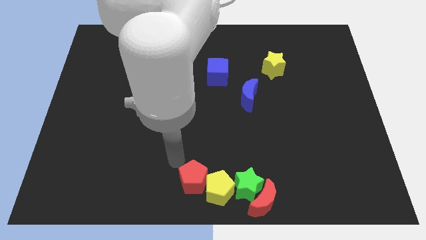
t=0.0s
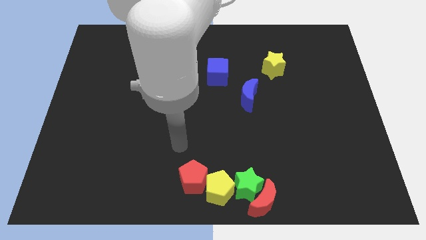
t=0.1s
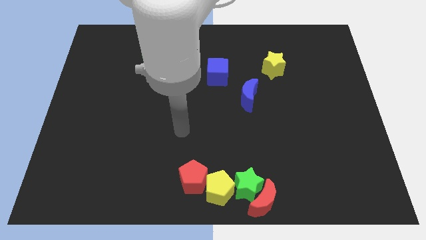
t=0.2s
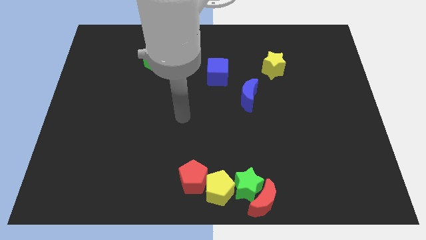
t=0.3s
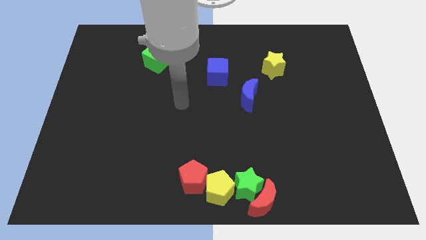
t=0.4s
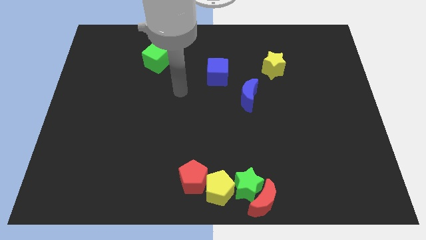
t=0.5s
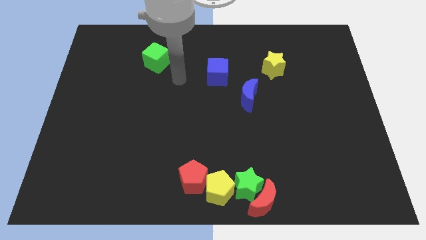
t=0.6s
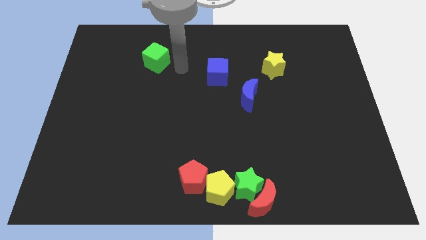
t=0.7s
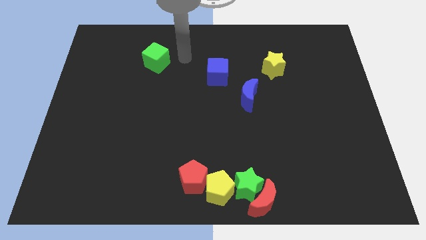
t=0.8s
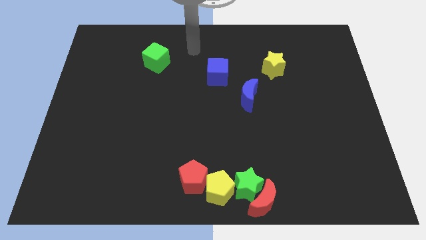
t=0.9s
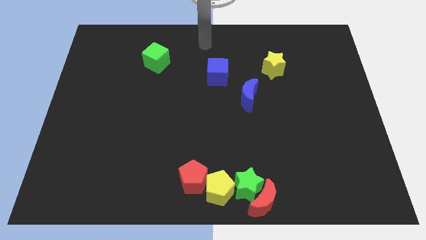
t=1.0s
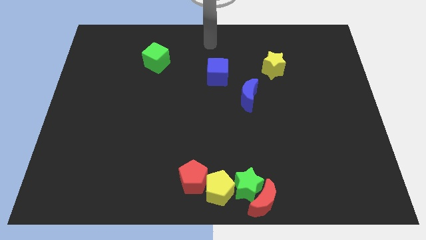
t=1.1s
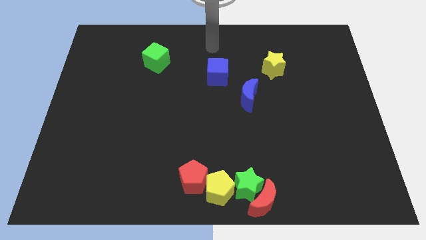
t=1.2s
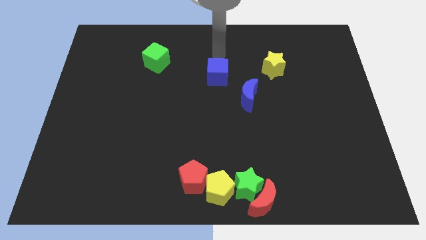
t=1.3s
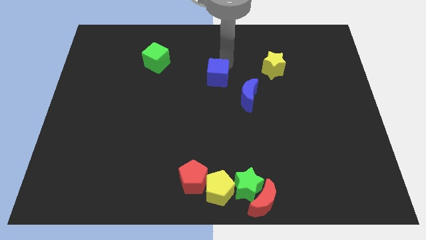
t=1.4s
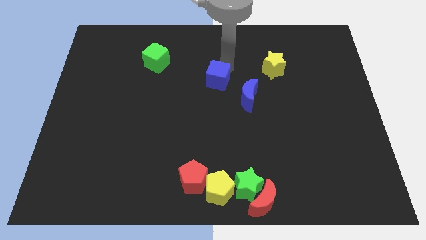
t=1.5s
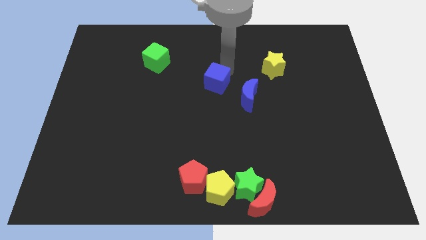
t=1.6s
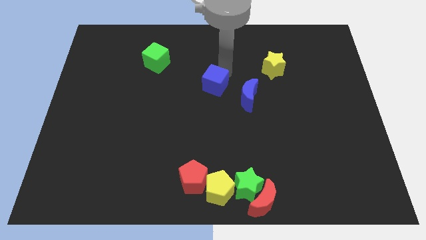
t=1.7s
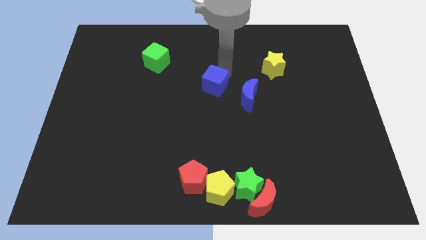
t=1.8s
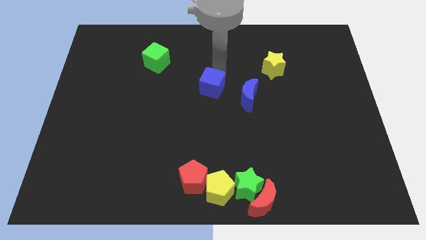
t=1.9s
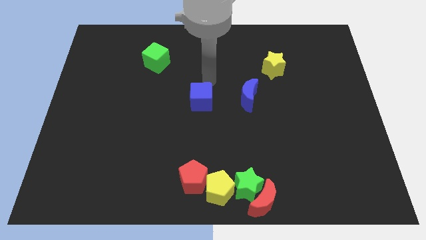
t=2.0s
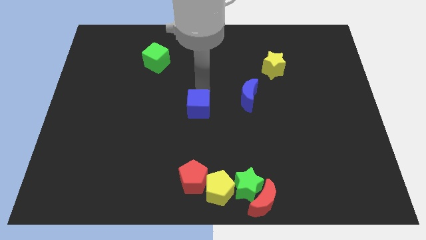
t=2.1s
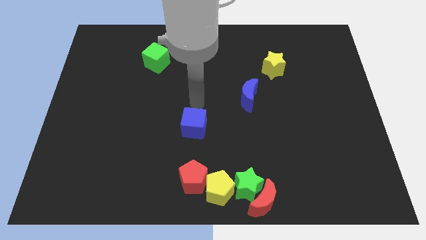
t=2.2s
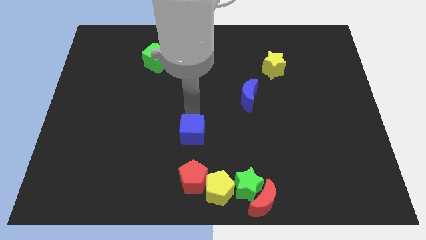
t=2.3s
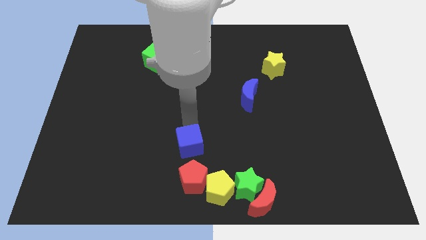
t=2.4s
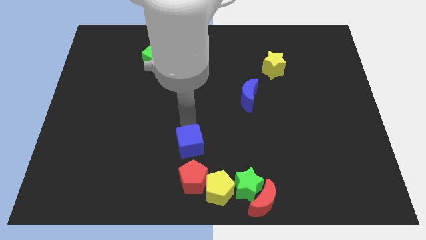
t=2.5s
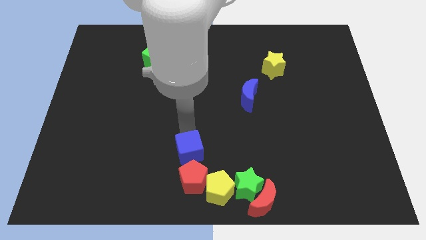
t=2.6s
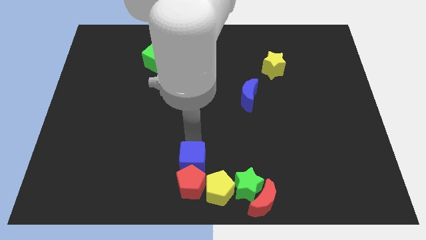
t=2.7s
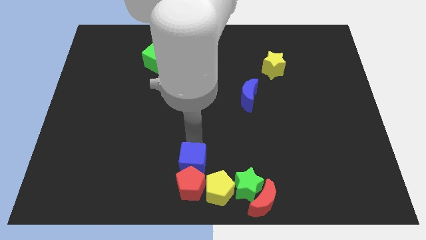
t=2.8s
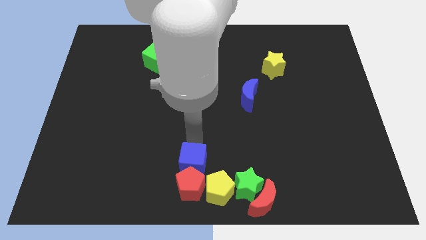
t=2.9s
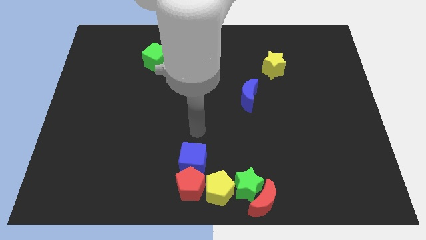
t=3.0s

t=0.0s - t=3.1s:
push the blue cube into the top side of the red pentagon

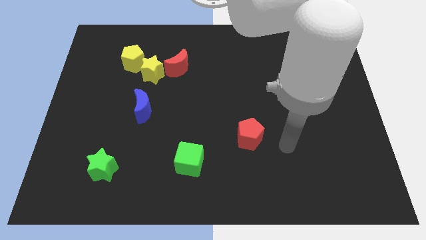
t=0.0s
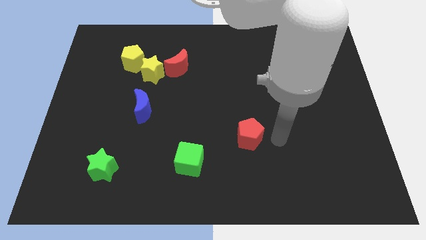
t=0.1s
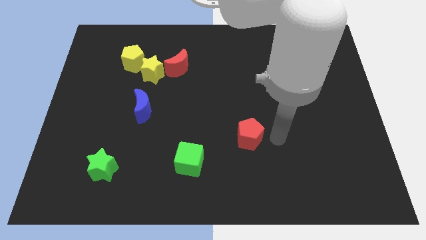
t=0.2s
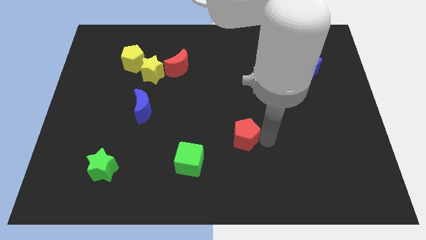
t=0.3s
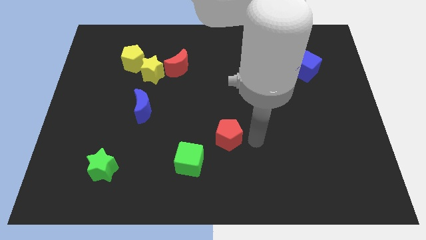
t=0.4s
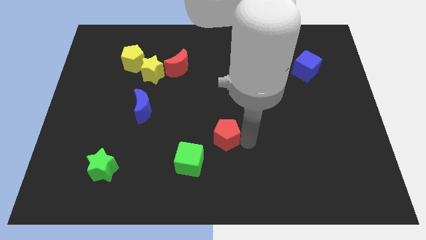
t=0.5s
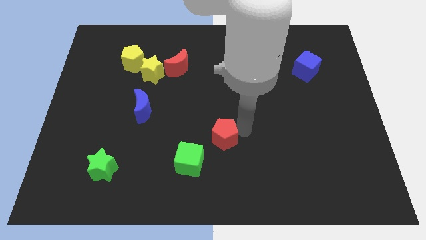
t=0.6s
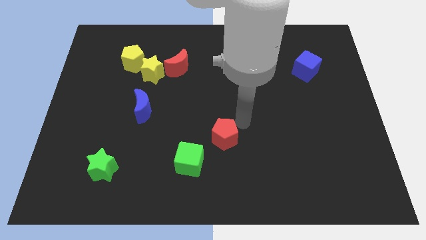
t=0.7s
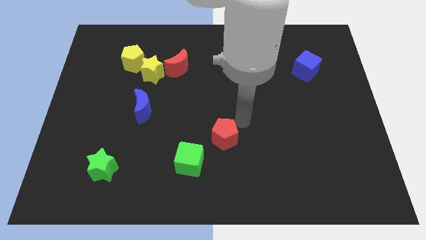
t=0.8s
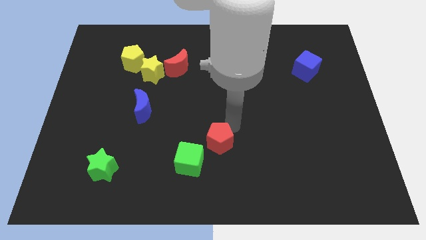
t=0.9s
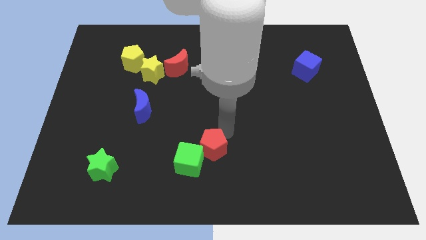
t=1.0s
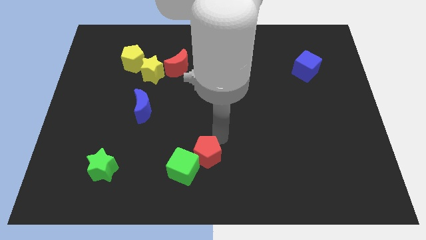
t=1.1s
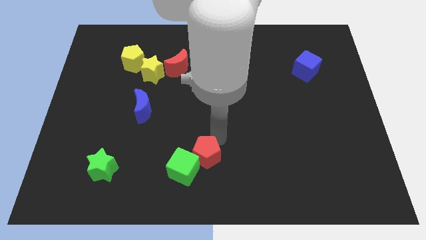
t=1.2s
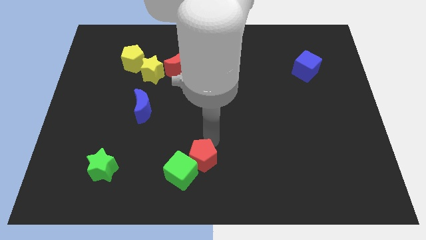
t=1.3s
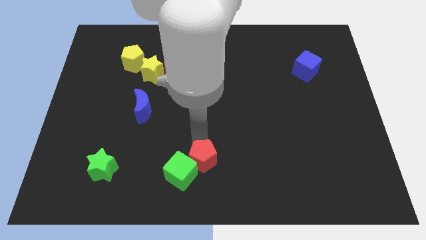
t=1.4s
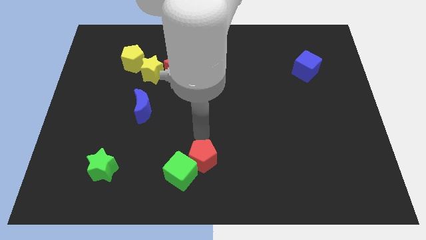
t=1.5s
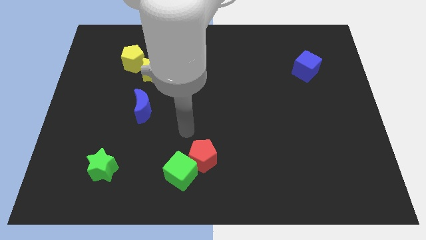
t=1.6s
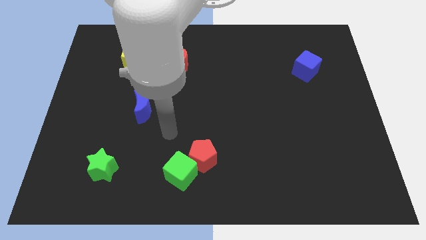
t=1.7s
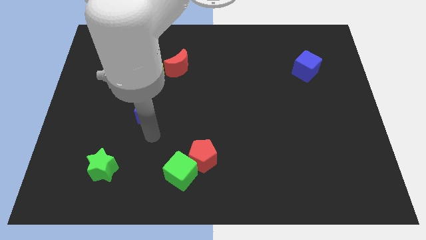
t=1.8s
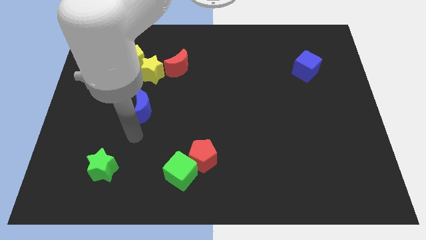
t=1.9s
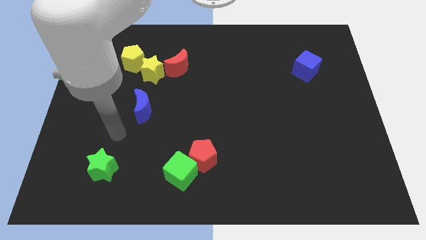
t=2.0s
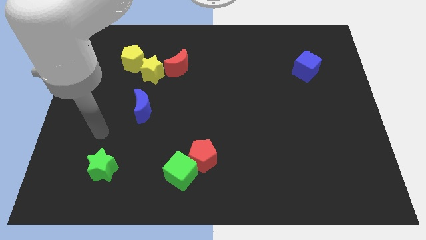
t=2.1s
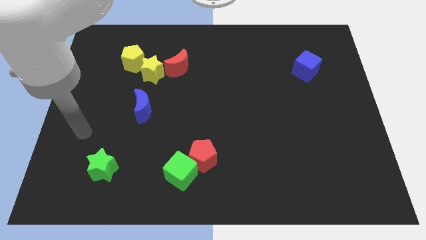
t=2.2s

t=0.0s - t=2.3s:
move the red pentagon along with the green cube towards the bottom

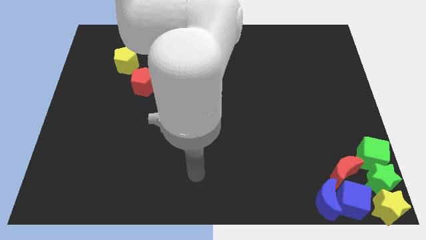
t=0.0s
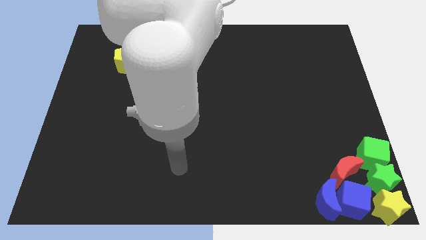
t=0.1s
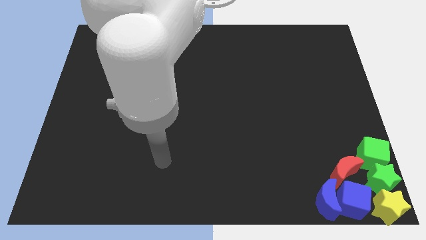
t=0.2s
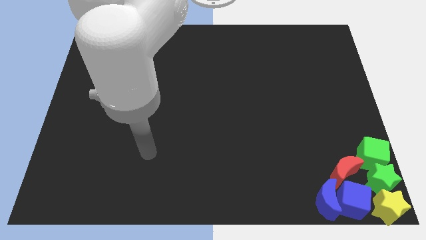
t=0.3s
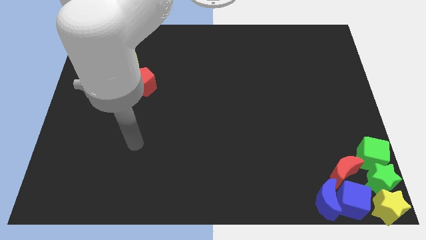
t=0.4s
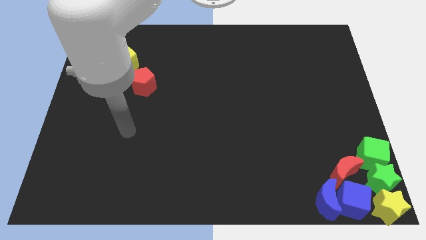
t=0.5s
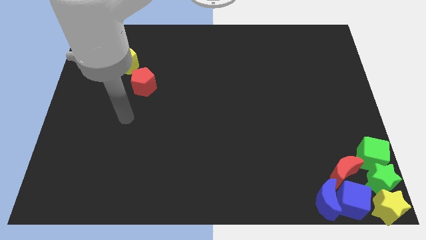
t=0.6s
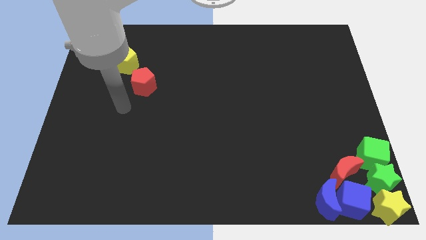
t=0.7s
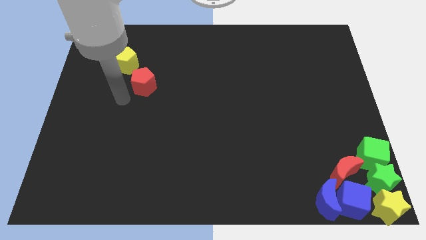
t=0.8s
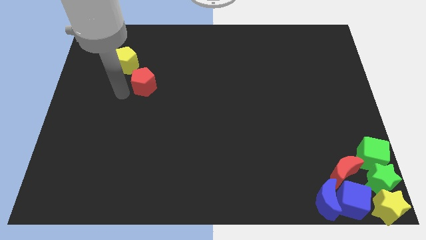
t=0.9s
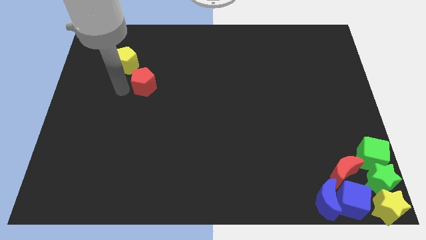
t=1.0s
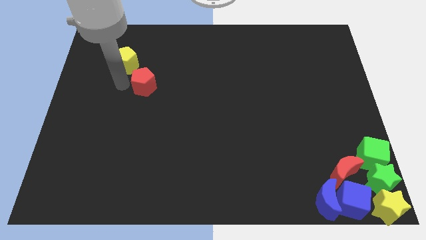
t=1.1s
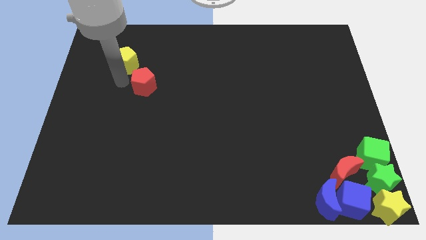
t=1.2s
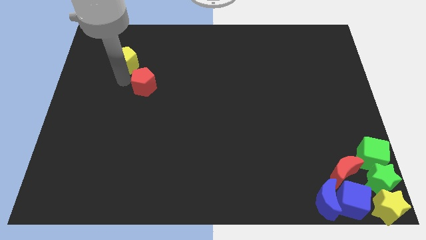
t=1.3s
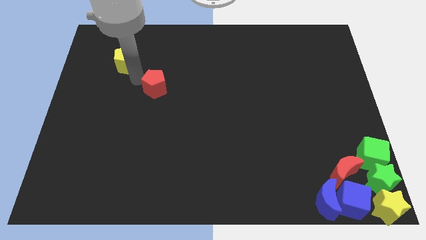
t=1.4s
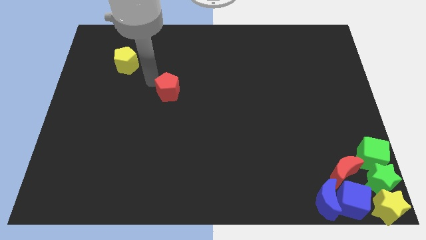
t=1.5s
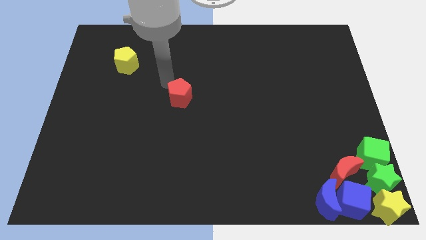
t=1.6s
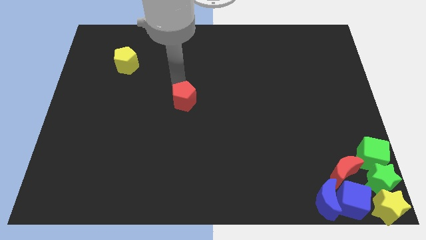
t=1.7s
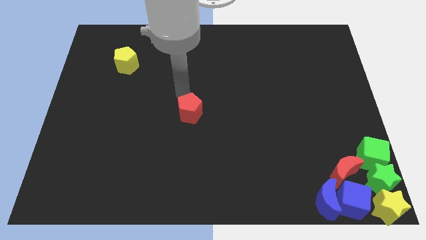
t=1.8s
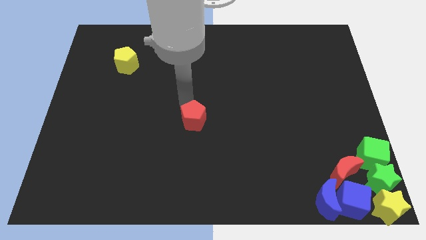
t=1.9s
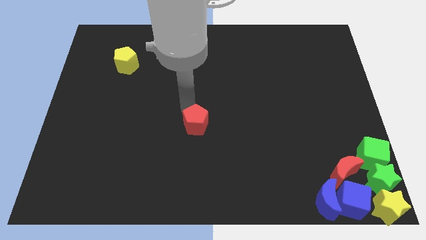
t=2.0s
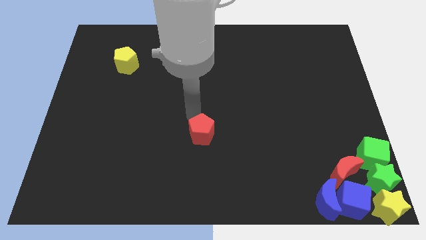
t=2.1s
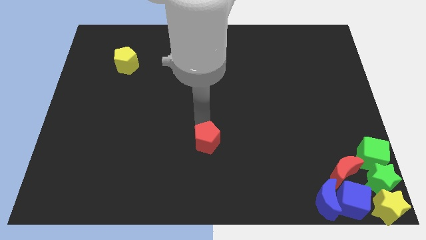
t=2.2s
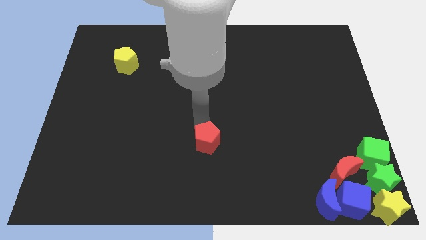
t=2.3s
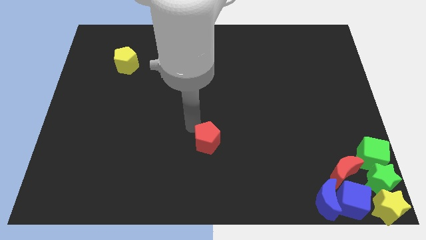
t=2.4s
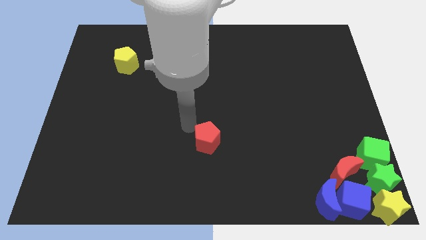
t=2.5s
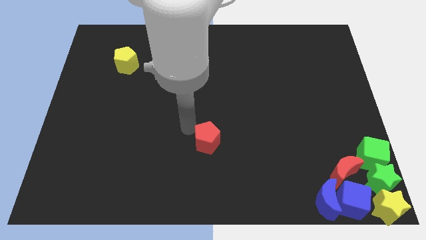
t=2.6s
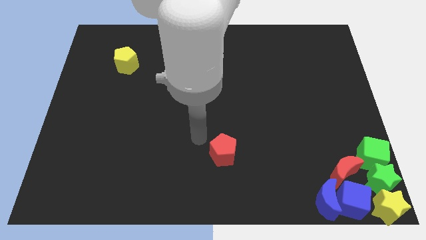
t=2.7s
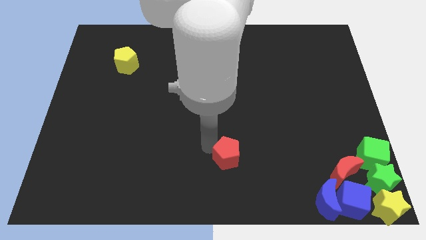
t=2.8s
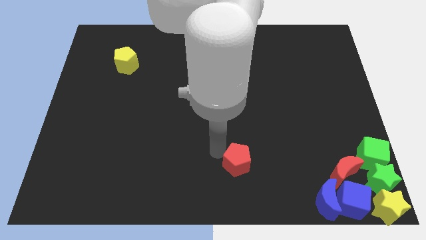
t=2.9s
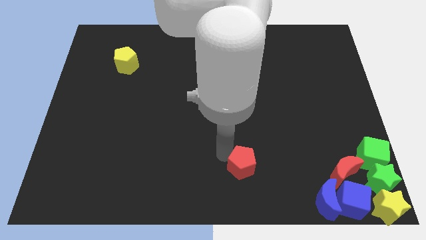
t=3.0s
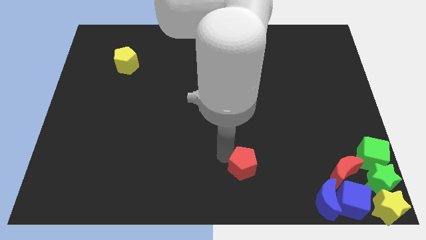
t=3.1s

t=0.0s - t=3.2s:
push the red pentagon towards the blue moon

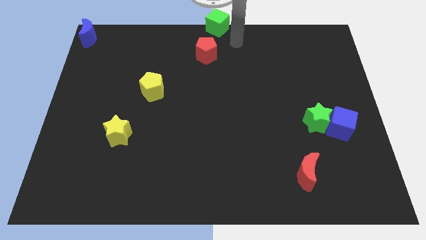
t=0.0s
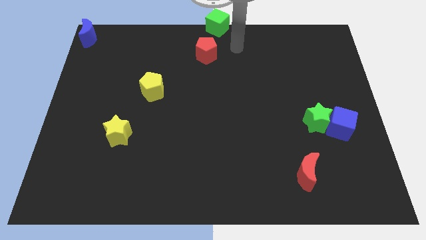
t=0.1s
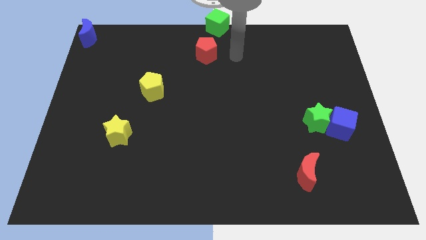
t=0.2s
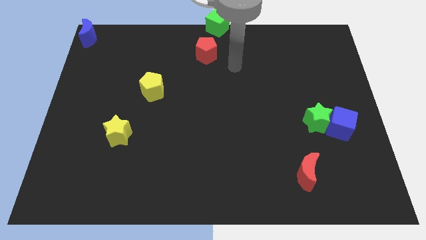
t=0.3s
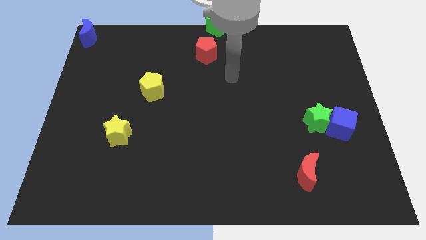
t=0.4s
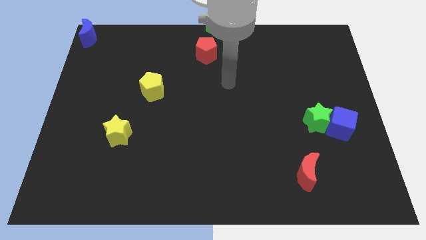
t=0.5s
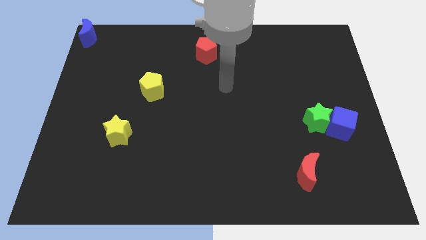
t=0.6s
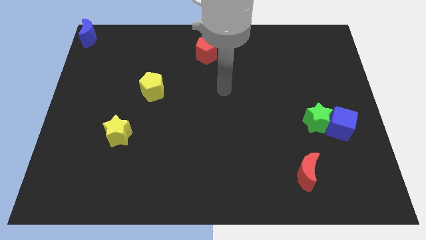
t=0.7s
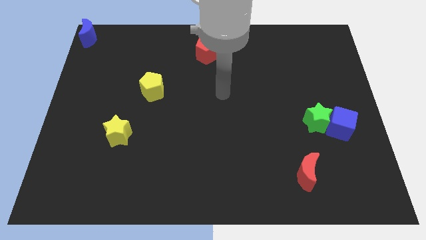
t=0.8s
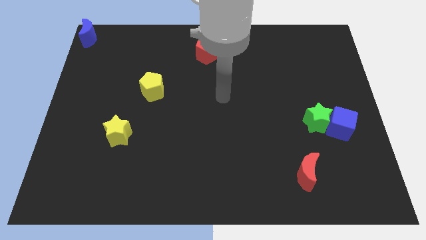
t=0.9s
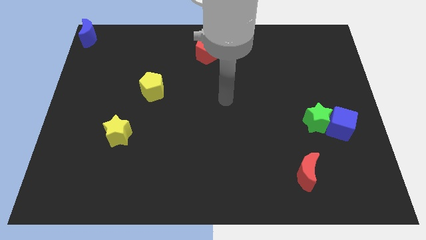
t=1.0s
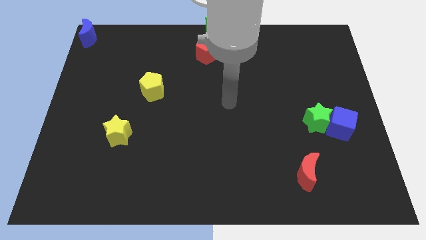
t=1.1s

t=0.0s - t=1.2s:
move arm close to the center of the board
